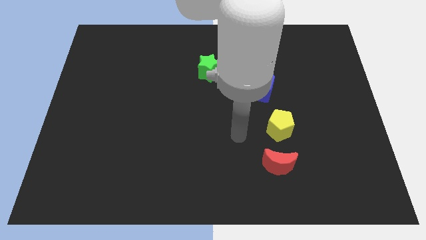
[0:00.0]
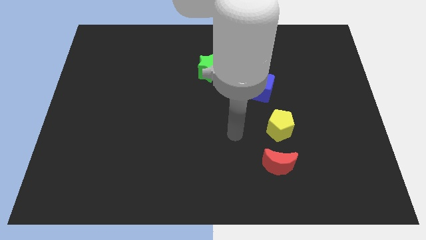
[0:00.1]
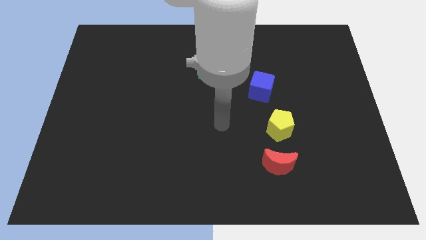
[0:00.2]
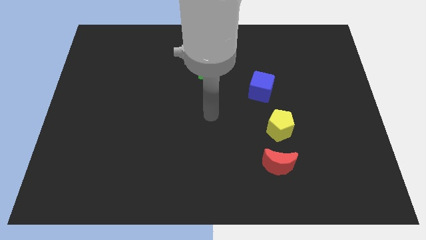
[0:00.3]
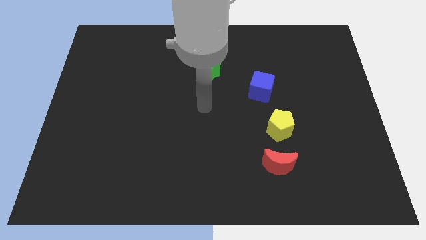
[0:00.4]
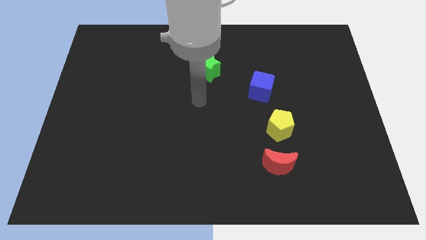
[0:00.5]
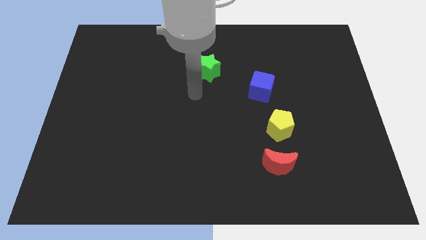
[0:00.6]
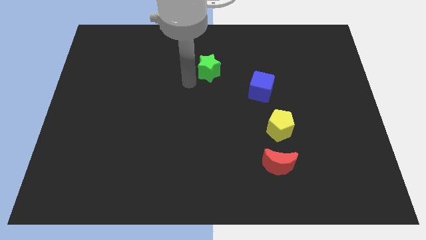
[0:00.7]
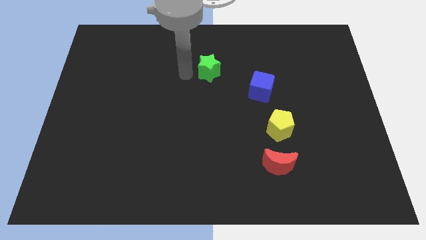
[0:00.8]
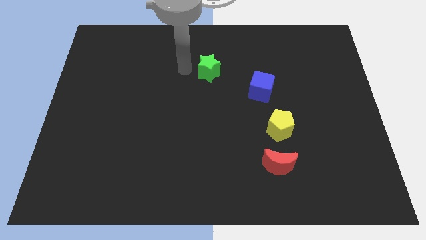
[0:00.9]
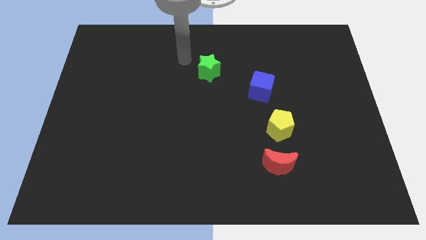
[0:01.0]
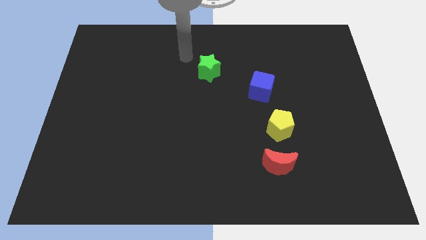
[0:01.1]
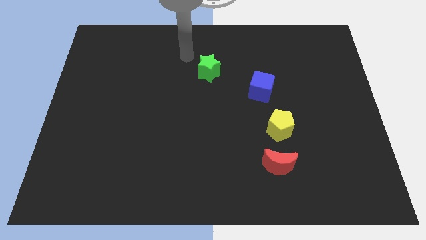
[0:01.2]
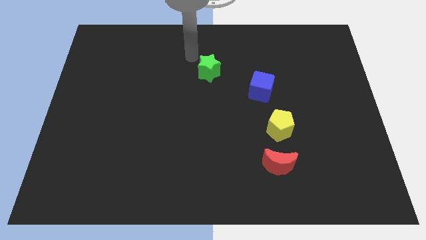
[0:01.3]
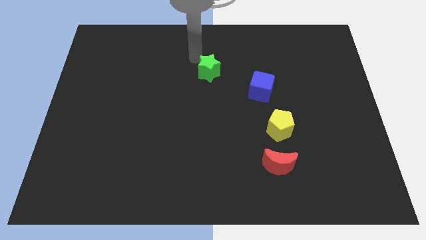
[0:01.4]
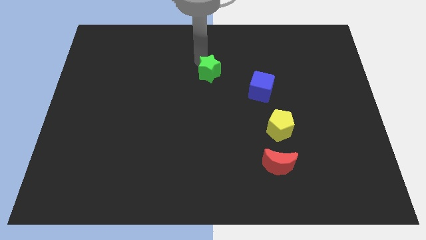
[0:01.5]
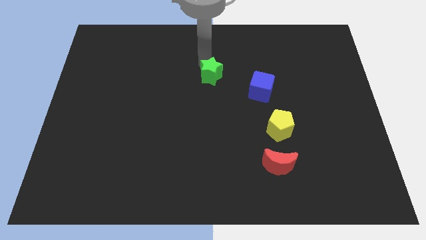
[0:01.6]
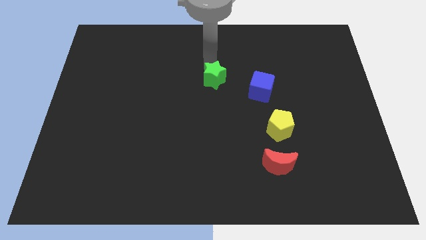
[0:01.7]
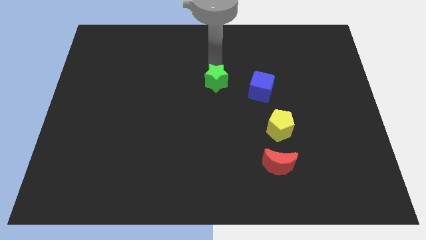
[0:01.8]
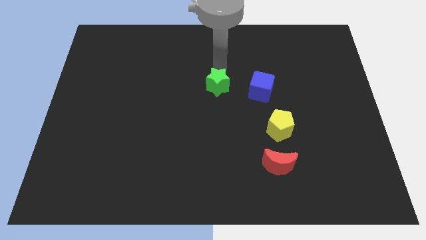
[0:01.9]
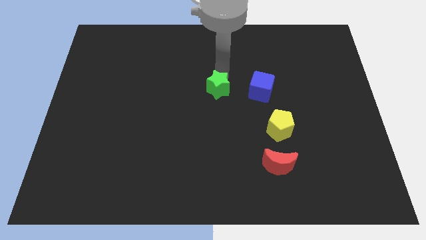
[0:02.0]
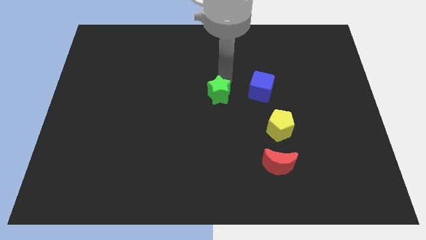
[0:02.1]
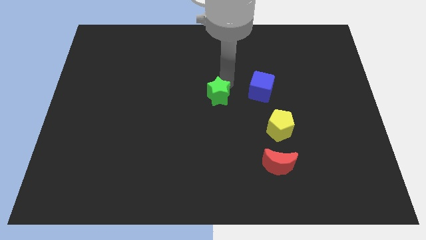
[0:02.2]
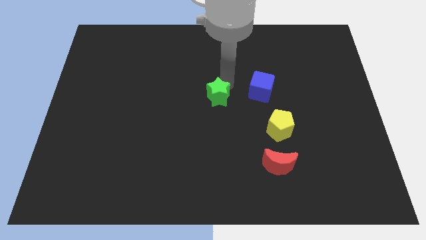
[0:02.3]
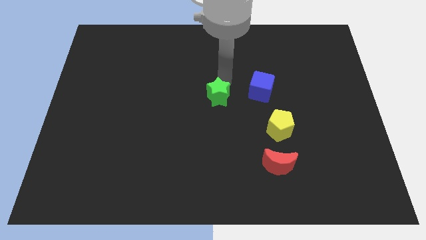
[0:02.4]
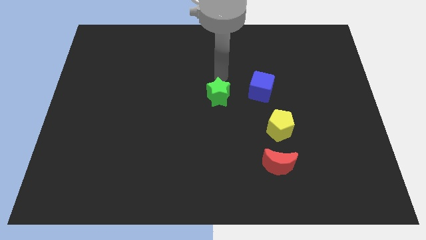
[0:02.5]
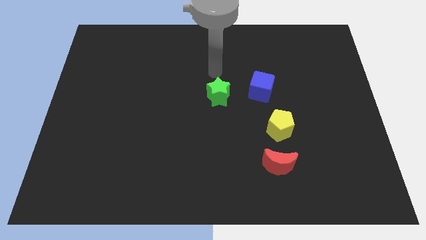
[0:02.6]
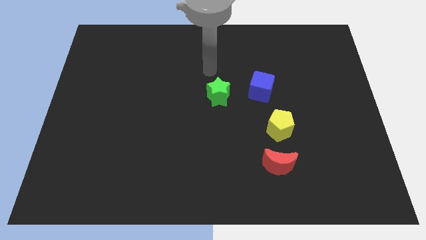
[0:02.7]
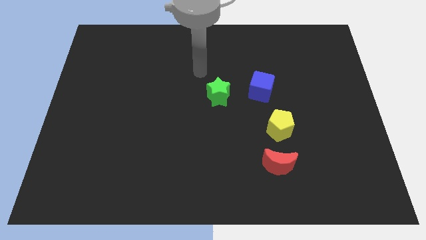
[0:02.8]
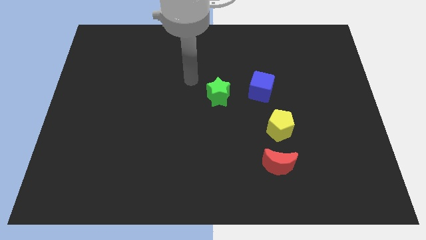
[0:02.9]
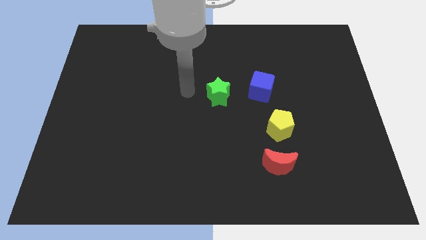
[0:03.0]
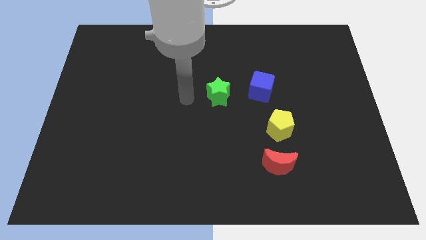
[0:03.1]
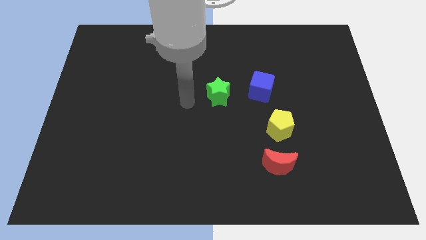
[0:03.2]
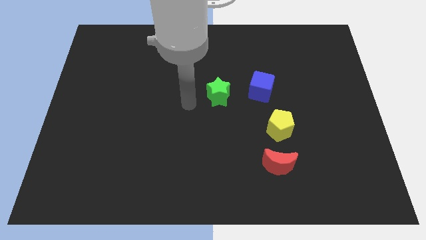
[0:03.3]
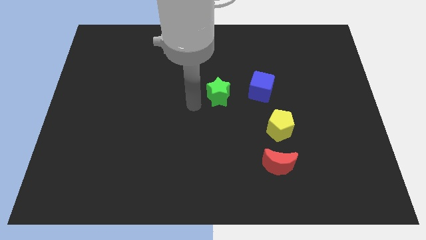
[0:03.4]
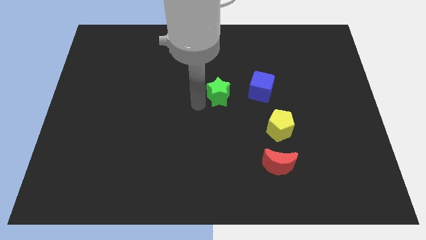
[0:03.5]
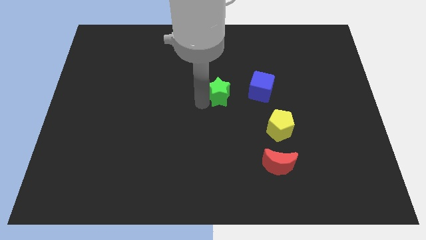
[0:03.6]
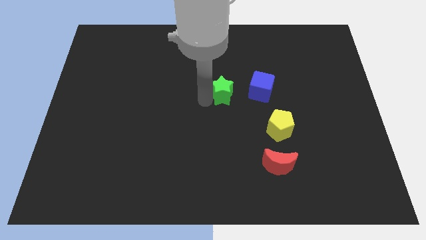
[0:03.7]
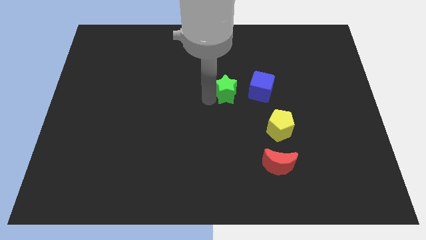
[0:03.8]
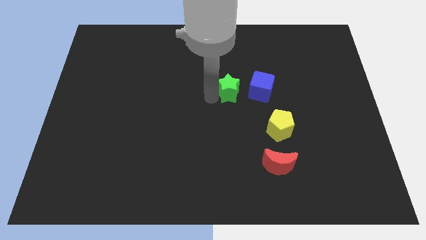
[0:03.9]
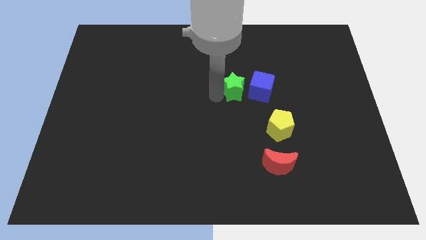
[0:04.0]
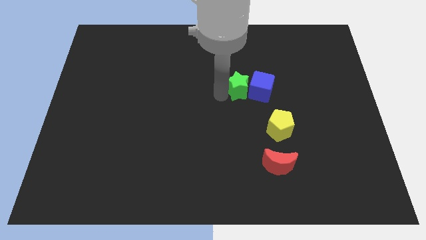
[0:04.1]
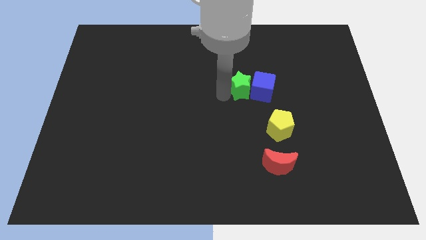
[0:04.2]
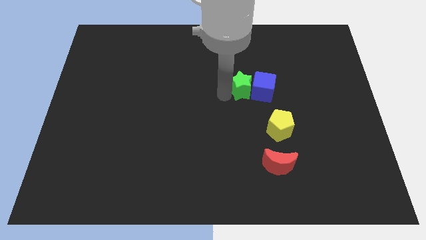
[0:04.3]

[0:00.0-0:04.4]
push the green star to the blue cube

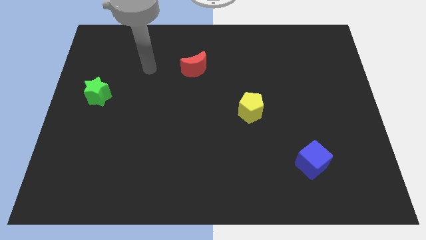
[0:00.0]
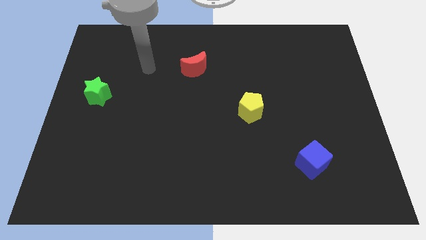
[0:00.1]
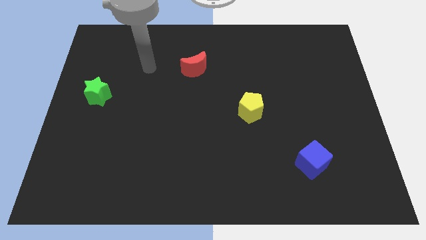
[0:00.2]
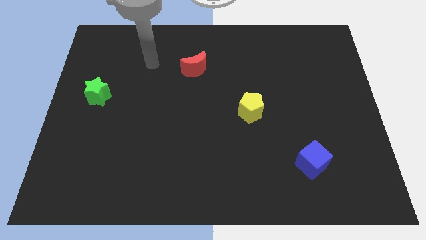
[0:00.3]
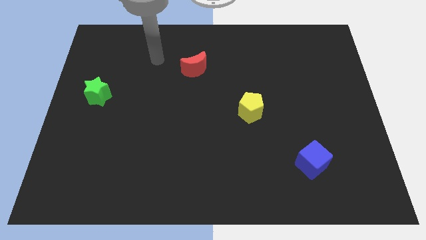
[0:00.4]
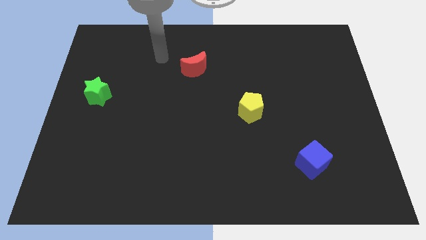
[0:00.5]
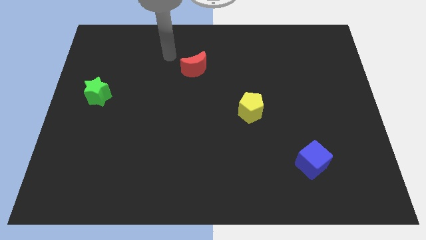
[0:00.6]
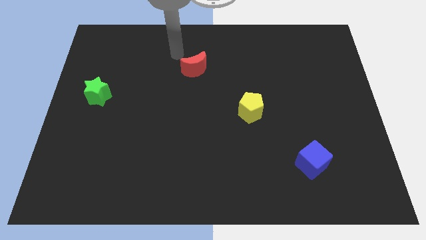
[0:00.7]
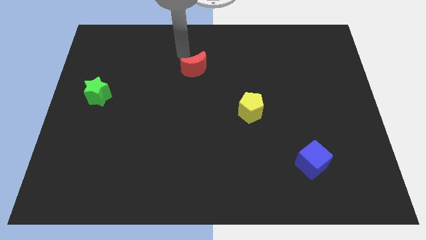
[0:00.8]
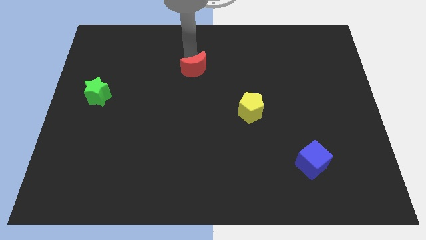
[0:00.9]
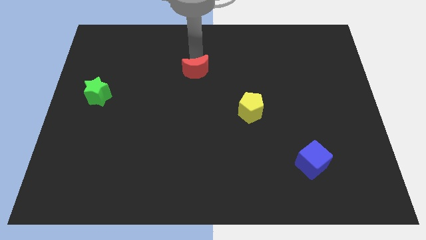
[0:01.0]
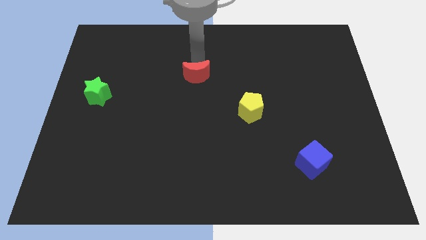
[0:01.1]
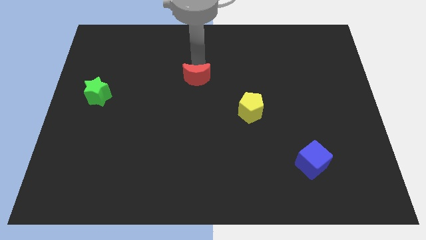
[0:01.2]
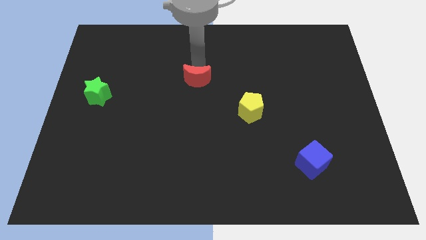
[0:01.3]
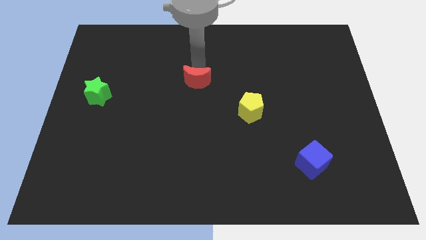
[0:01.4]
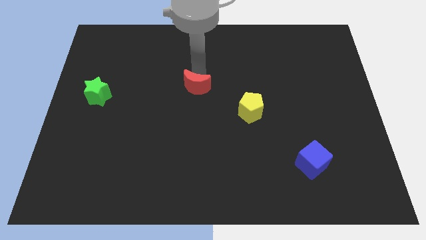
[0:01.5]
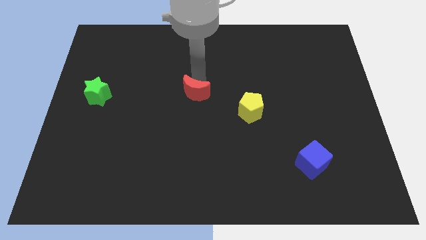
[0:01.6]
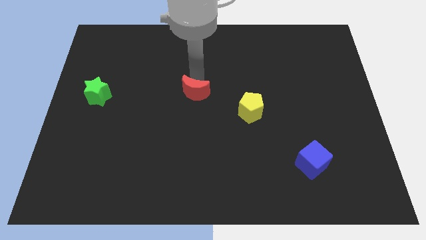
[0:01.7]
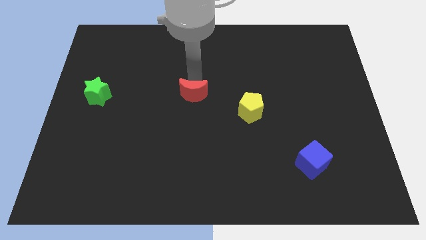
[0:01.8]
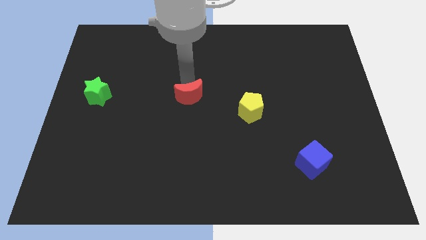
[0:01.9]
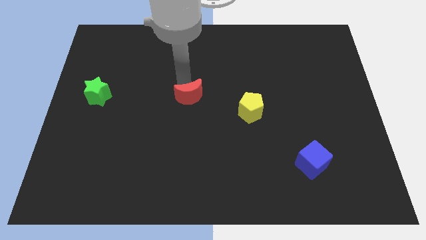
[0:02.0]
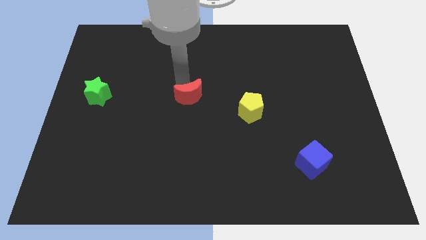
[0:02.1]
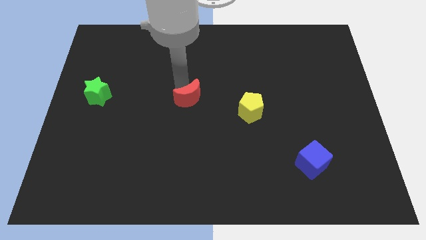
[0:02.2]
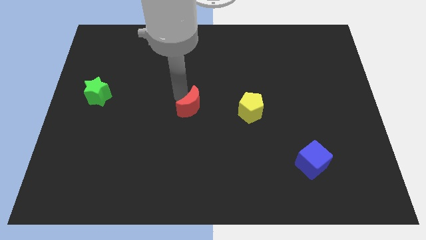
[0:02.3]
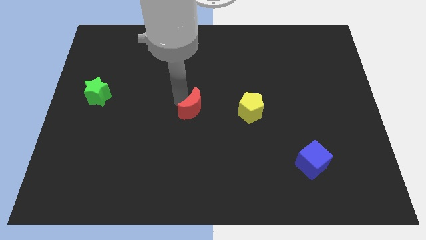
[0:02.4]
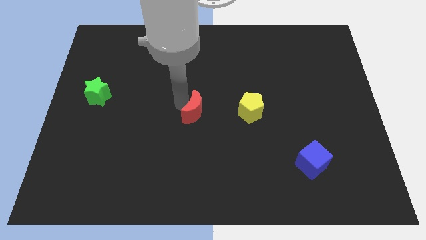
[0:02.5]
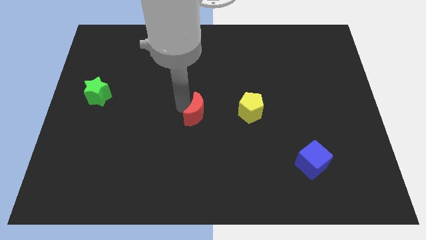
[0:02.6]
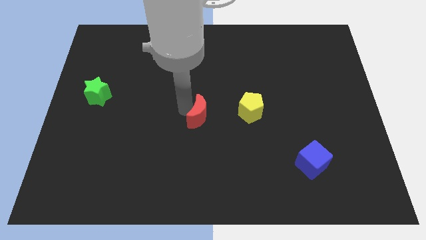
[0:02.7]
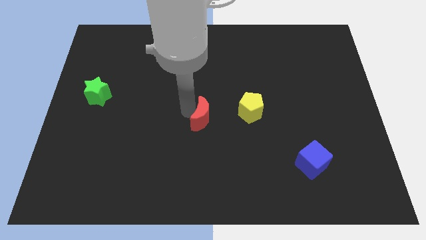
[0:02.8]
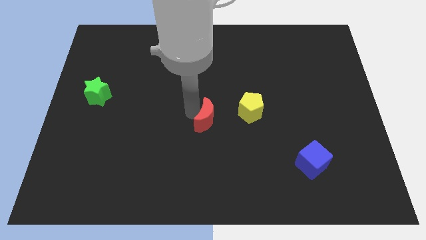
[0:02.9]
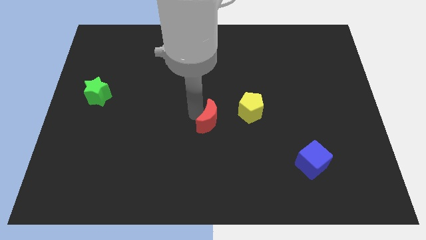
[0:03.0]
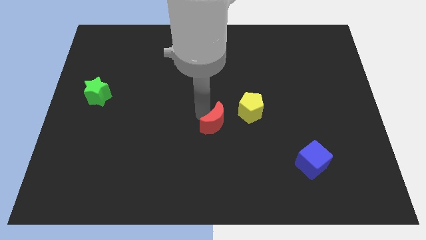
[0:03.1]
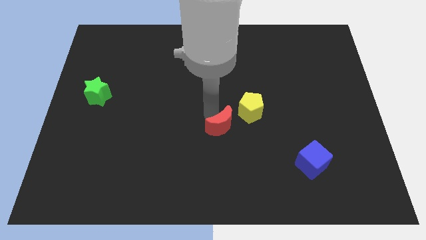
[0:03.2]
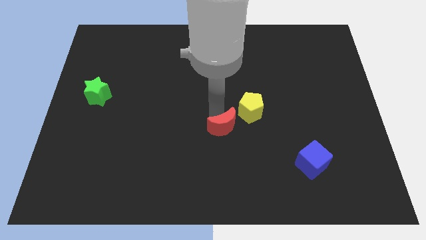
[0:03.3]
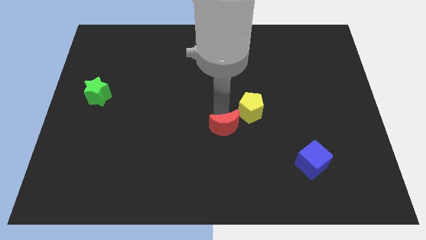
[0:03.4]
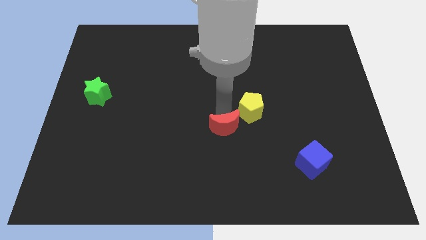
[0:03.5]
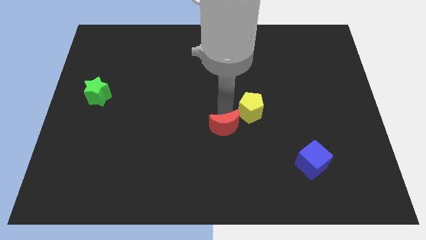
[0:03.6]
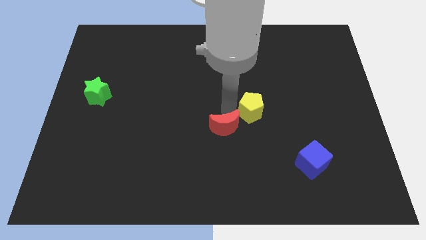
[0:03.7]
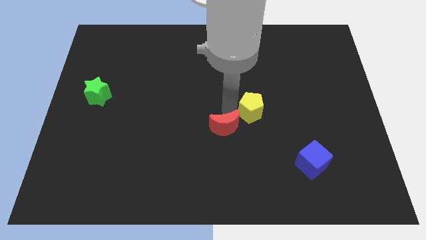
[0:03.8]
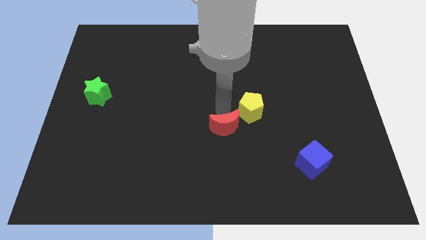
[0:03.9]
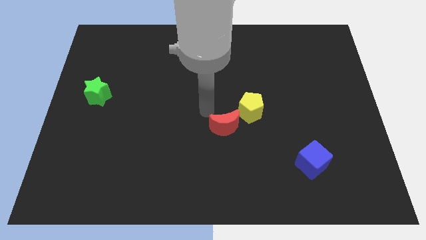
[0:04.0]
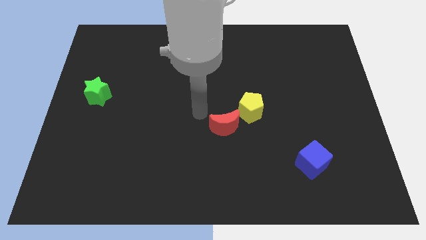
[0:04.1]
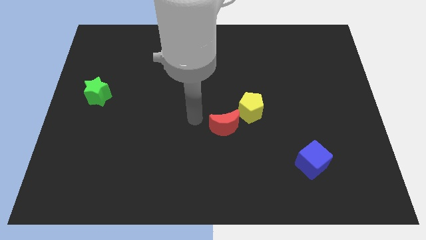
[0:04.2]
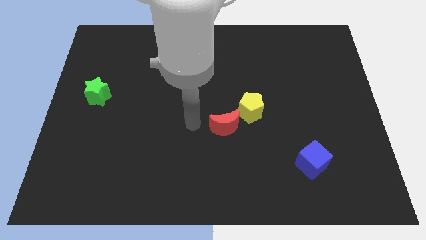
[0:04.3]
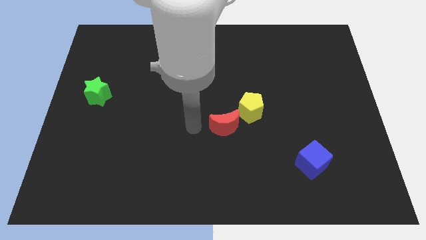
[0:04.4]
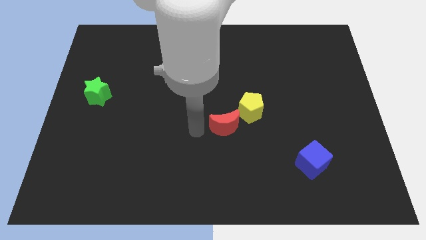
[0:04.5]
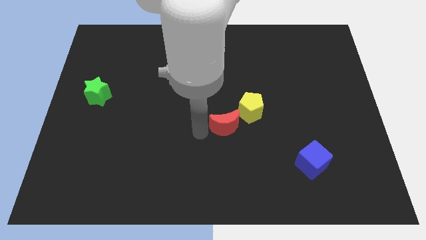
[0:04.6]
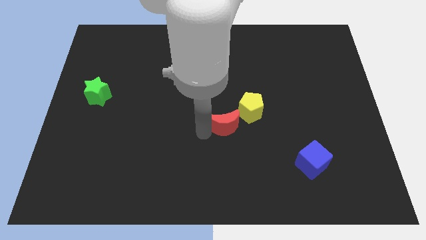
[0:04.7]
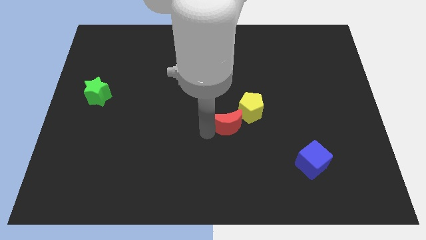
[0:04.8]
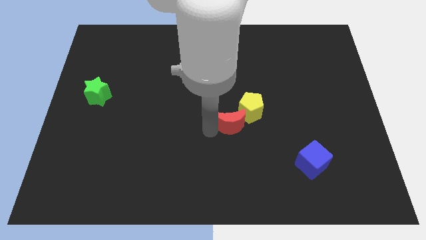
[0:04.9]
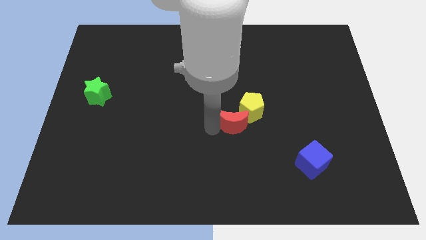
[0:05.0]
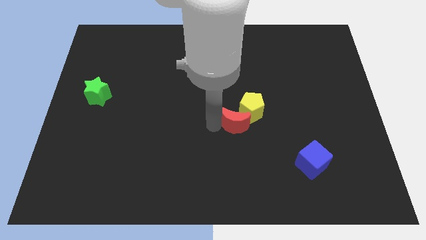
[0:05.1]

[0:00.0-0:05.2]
put the red block to the pentagon
